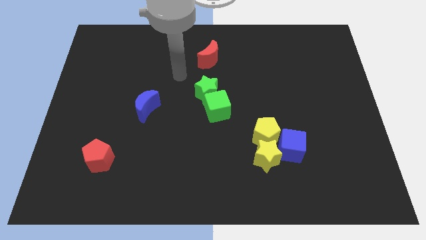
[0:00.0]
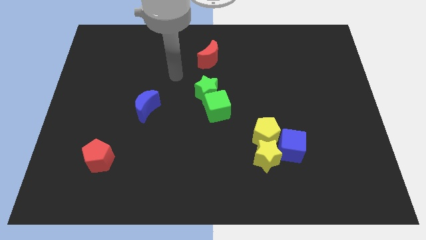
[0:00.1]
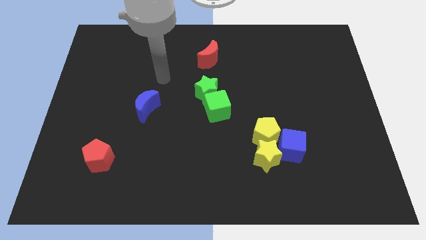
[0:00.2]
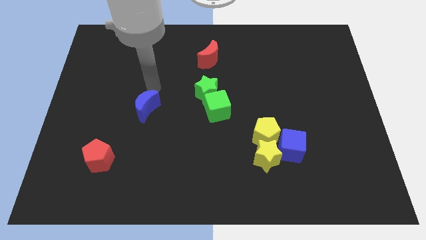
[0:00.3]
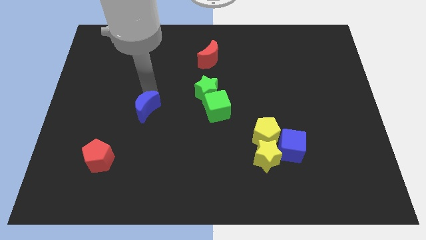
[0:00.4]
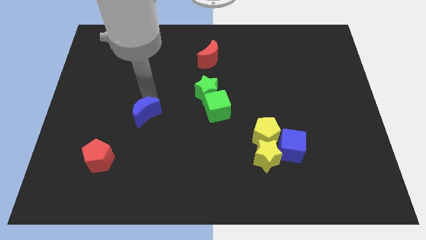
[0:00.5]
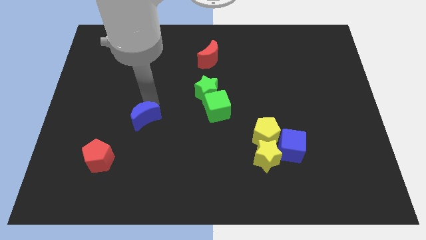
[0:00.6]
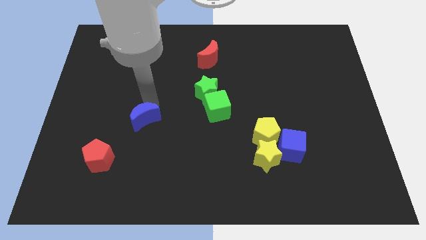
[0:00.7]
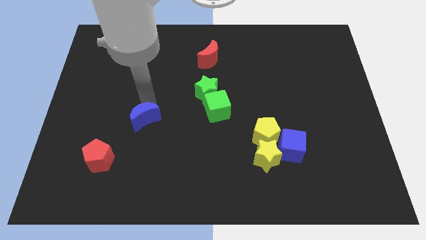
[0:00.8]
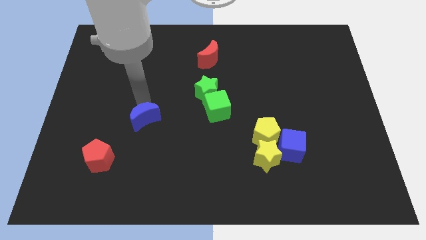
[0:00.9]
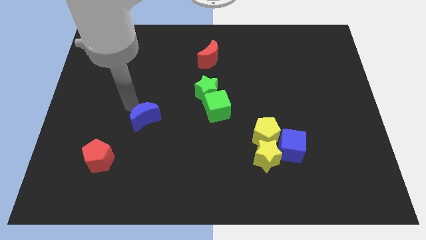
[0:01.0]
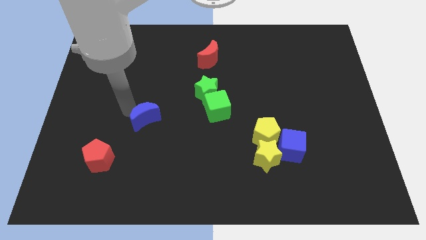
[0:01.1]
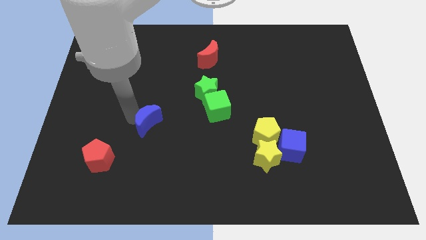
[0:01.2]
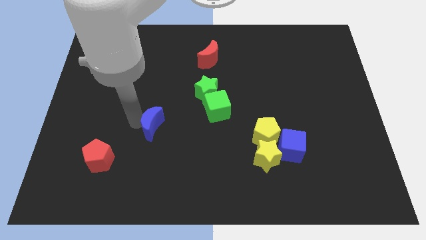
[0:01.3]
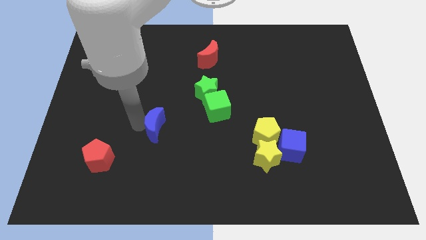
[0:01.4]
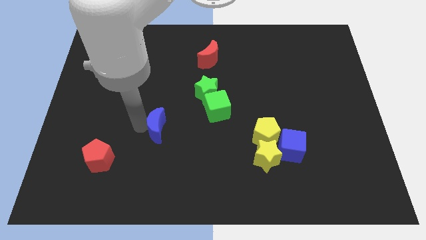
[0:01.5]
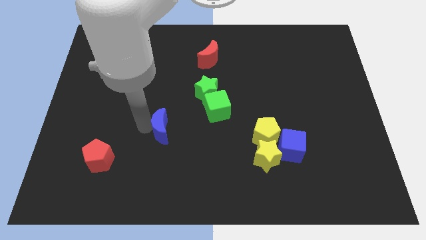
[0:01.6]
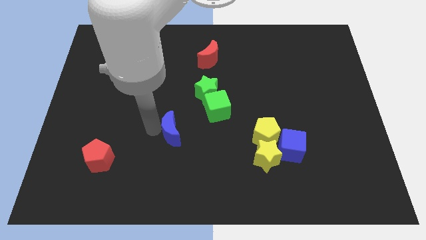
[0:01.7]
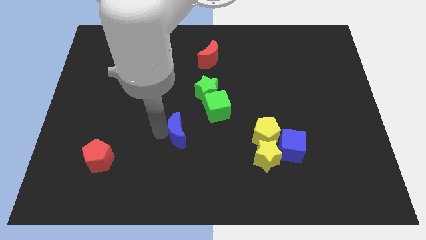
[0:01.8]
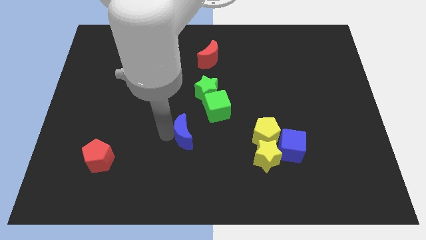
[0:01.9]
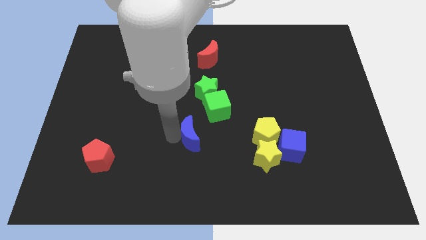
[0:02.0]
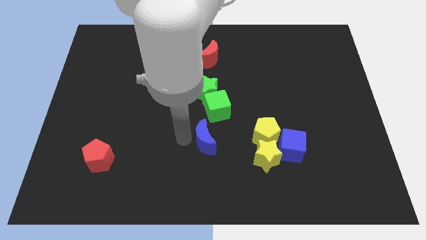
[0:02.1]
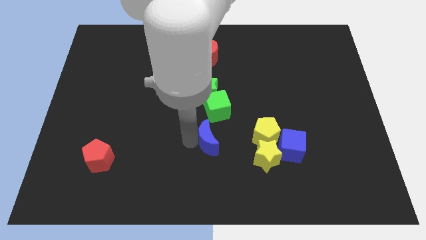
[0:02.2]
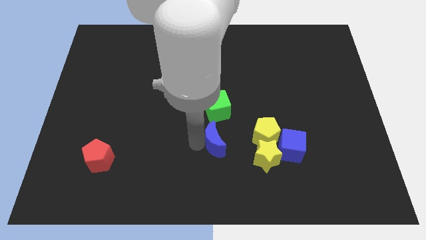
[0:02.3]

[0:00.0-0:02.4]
push the blue moon towards the center of board

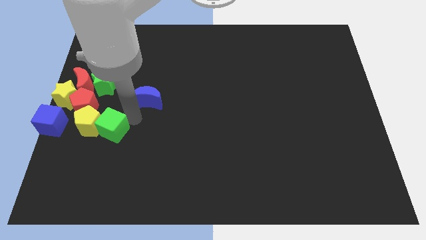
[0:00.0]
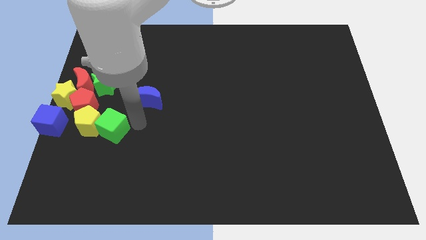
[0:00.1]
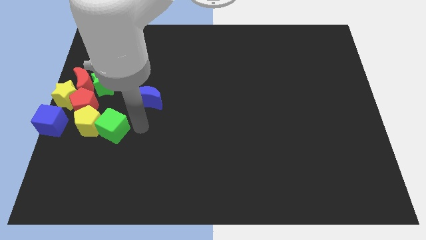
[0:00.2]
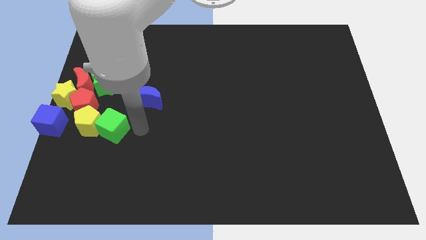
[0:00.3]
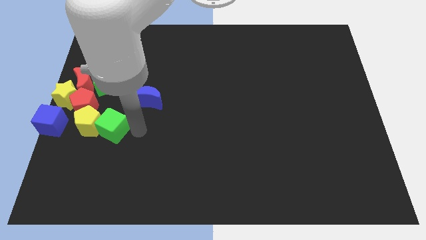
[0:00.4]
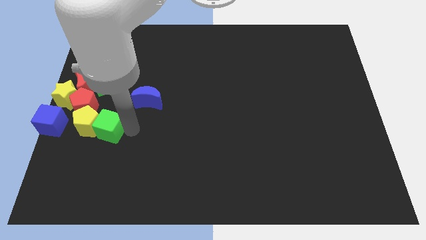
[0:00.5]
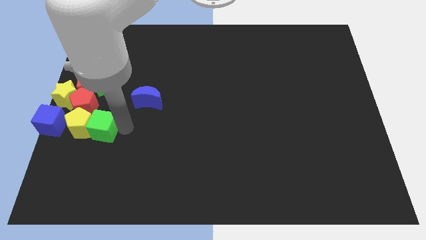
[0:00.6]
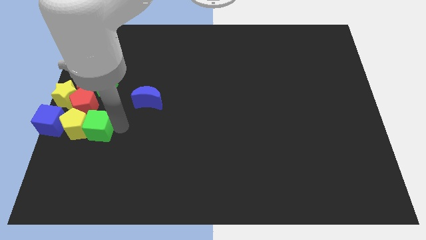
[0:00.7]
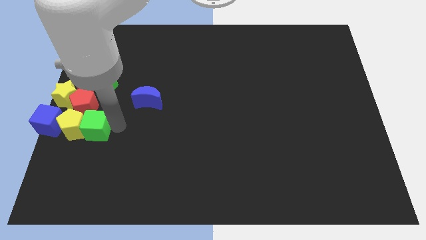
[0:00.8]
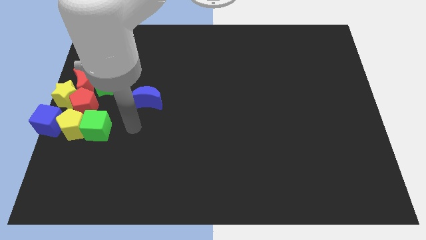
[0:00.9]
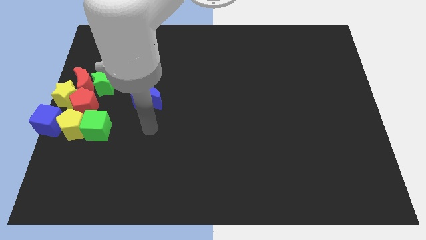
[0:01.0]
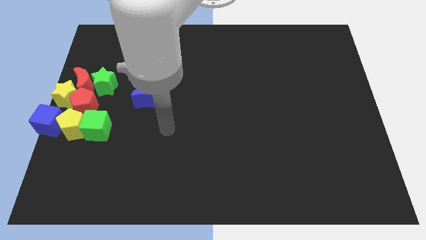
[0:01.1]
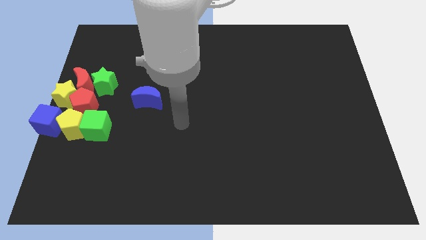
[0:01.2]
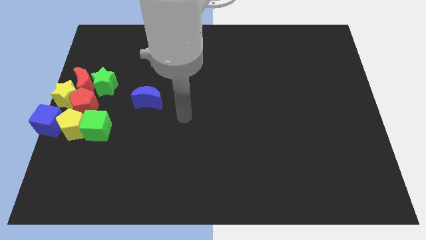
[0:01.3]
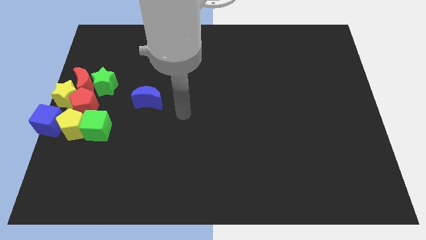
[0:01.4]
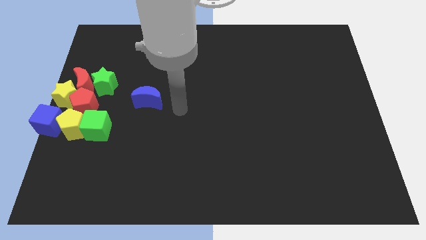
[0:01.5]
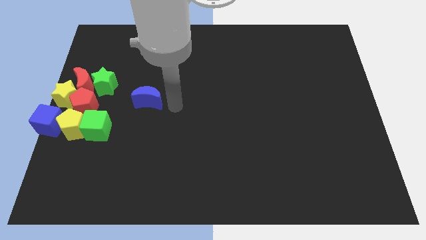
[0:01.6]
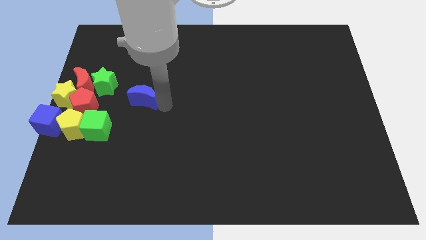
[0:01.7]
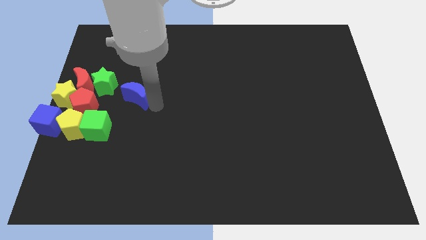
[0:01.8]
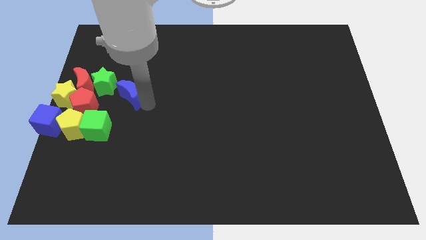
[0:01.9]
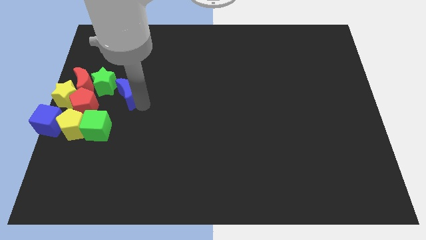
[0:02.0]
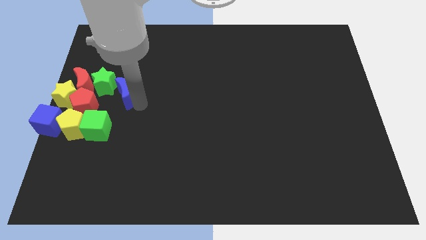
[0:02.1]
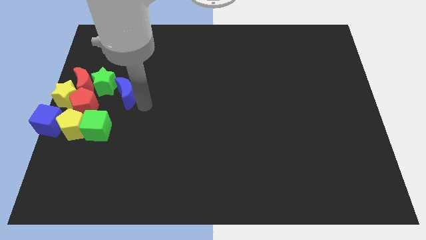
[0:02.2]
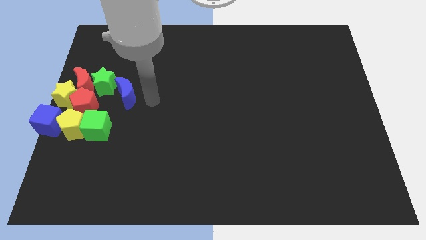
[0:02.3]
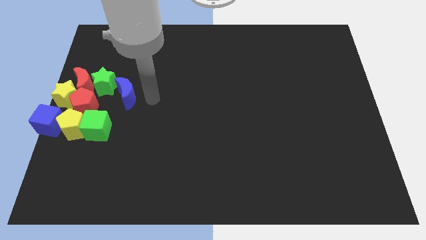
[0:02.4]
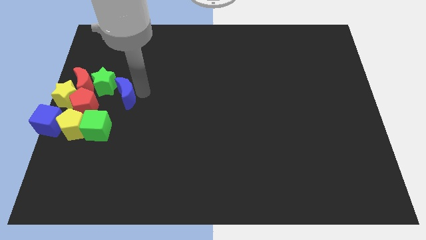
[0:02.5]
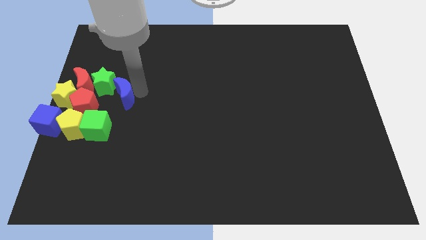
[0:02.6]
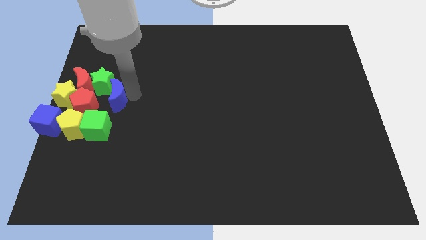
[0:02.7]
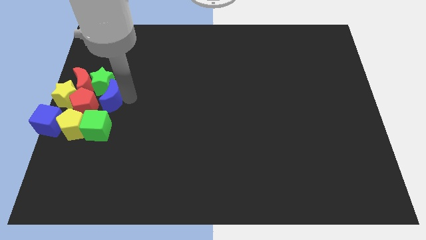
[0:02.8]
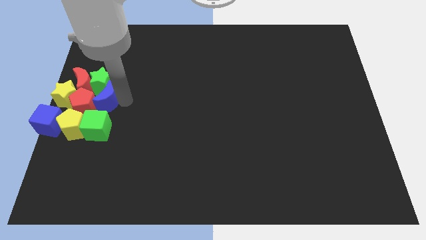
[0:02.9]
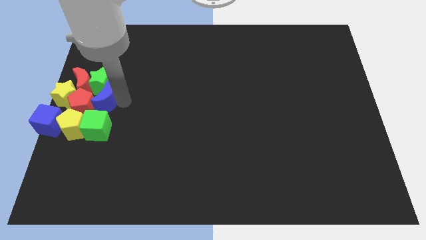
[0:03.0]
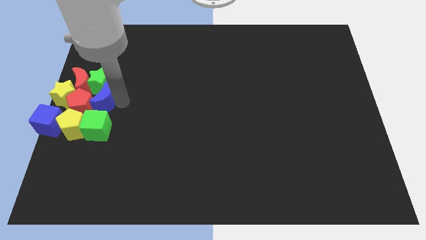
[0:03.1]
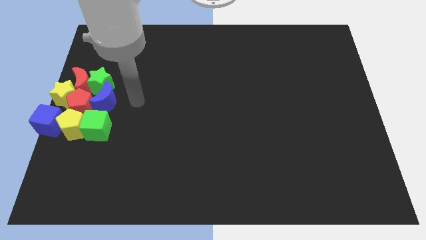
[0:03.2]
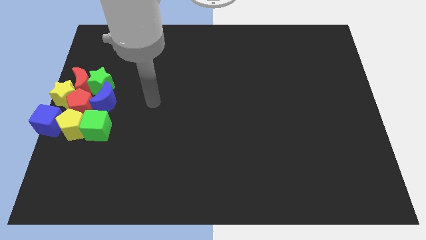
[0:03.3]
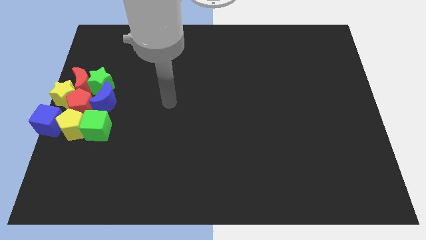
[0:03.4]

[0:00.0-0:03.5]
push the yellow pentagon green cube and blue moon into the group of blocks

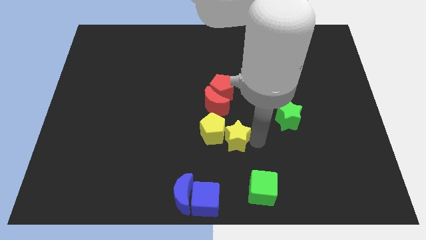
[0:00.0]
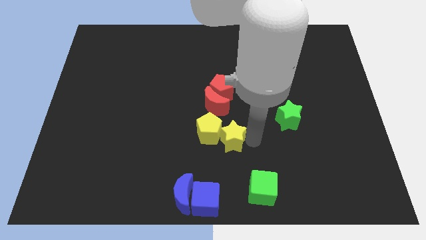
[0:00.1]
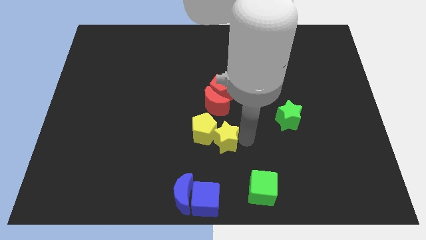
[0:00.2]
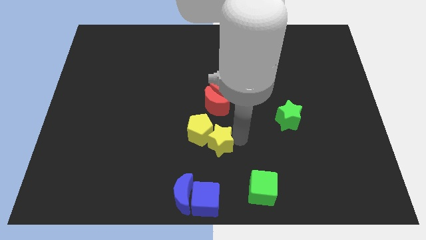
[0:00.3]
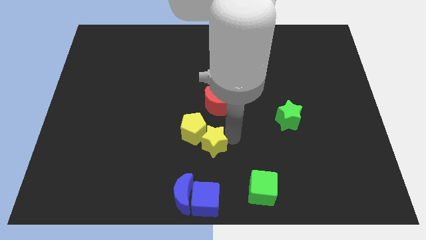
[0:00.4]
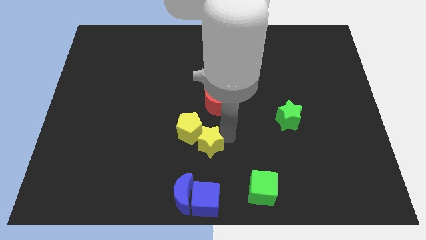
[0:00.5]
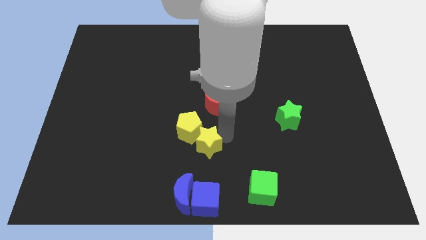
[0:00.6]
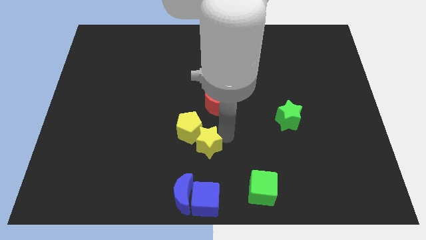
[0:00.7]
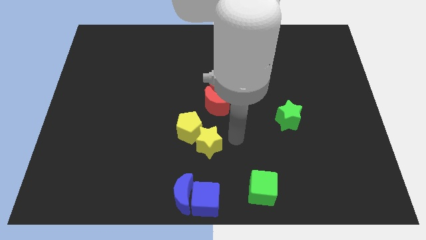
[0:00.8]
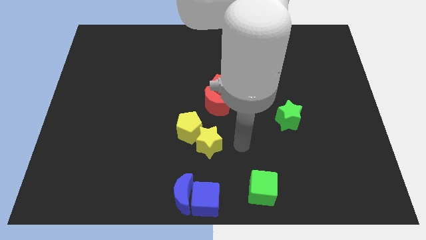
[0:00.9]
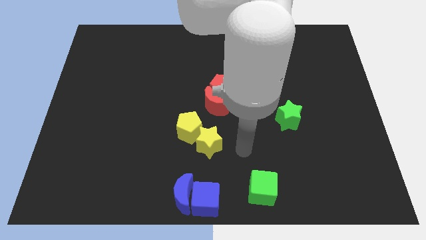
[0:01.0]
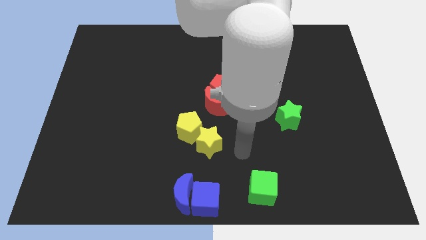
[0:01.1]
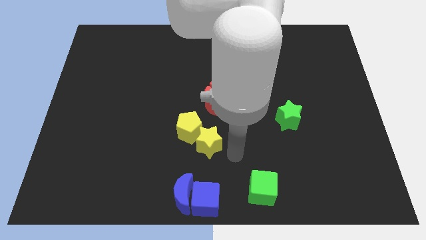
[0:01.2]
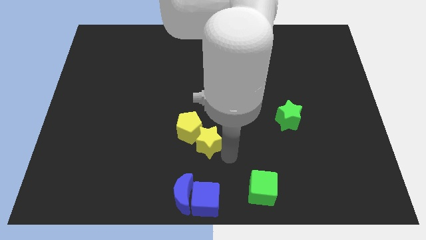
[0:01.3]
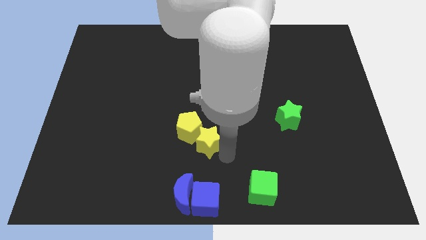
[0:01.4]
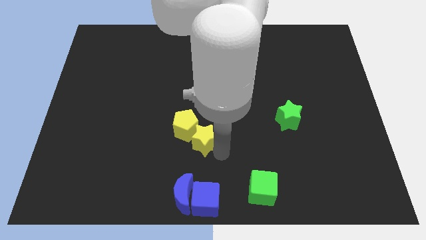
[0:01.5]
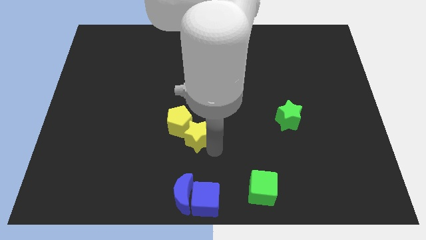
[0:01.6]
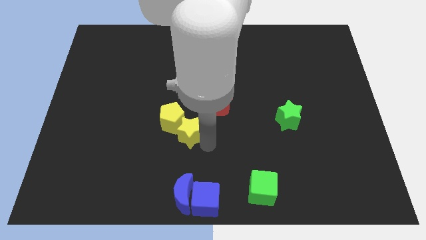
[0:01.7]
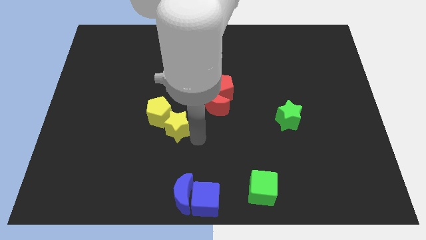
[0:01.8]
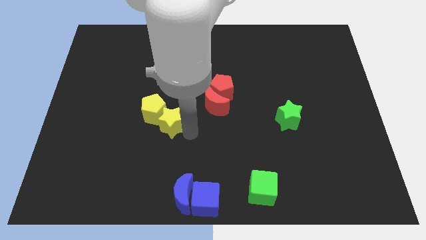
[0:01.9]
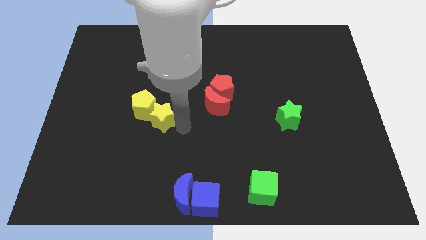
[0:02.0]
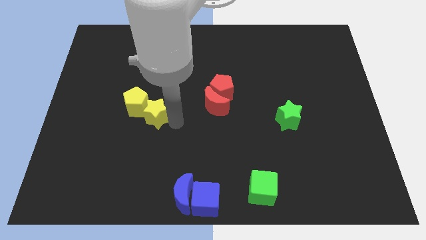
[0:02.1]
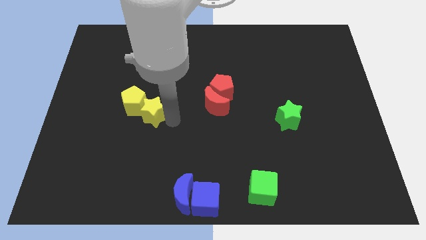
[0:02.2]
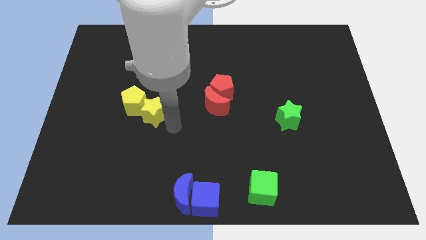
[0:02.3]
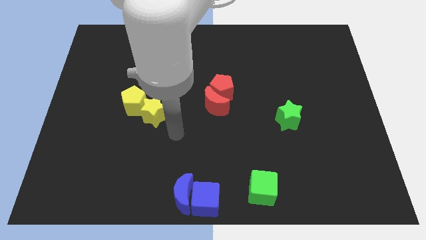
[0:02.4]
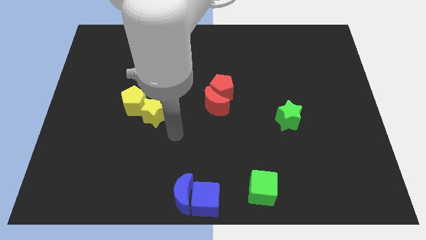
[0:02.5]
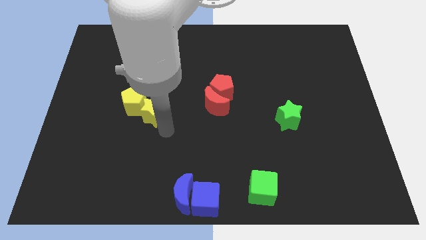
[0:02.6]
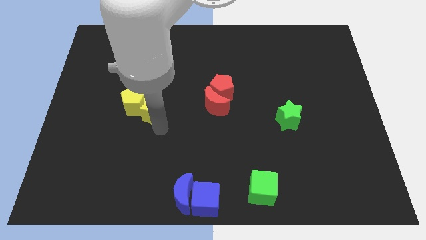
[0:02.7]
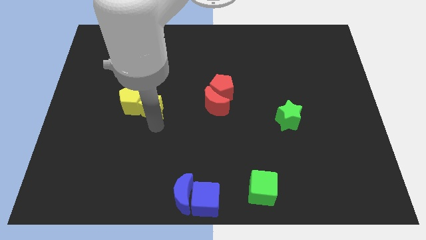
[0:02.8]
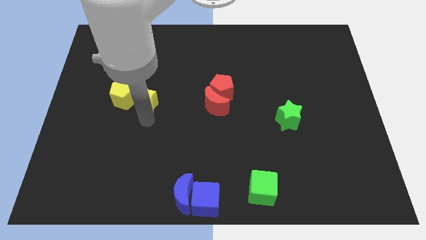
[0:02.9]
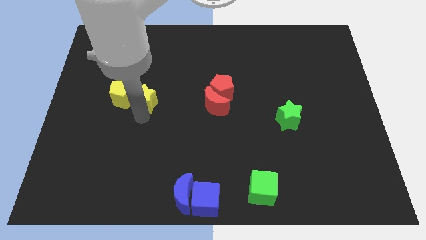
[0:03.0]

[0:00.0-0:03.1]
move the yellow star and yellow pentagon to the left of the red blocks
